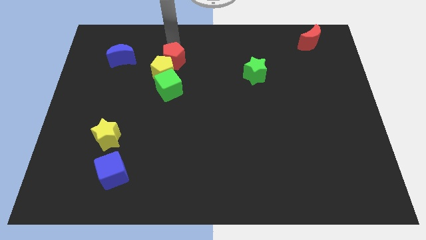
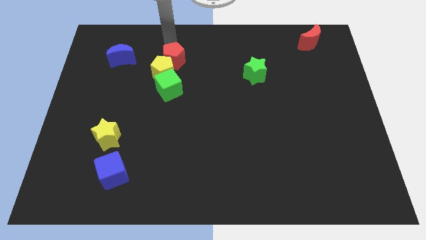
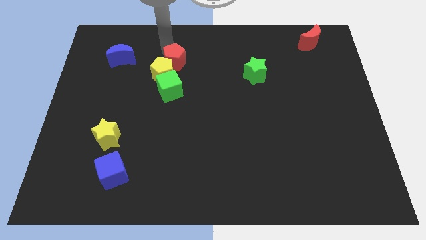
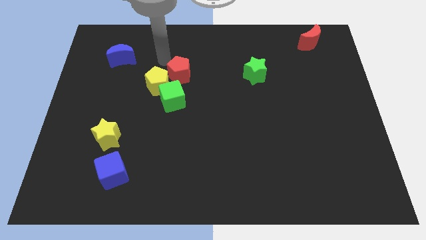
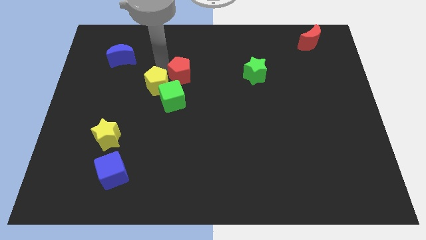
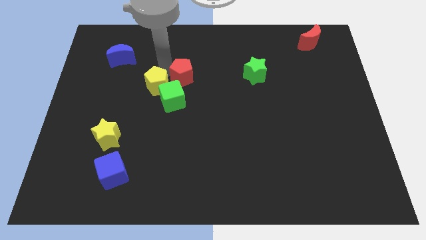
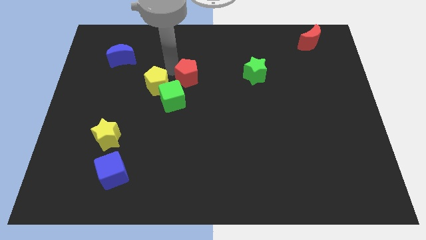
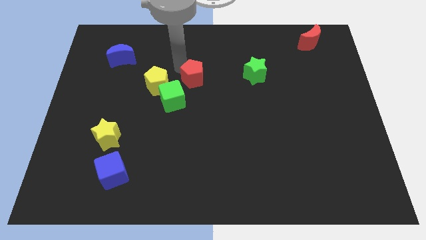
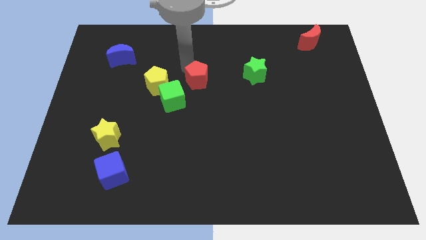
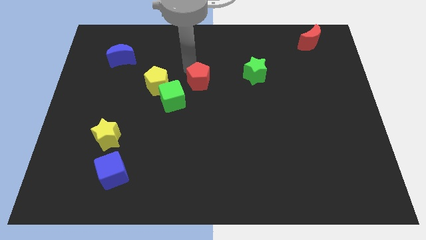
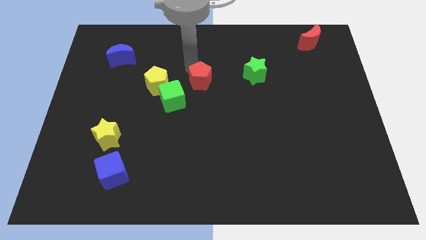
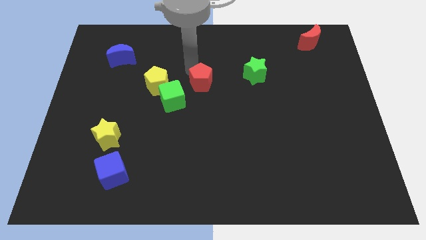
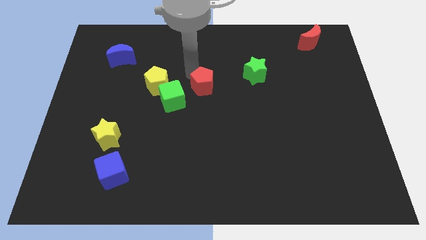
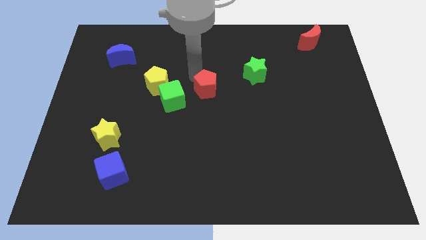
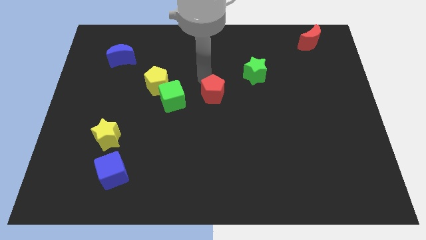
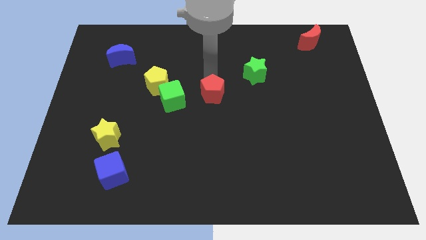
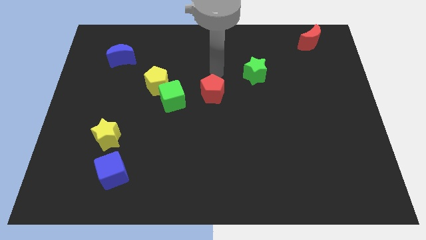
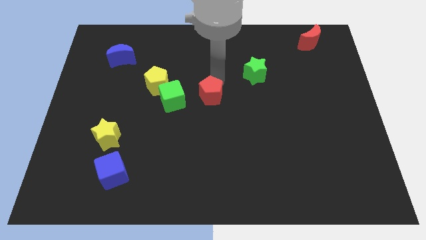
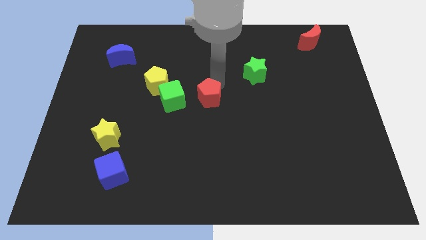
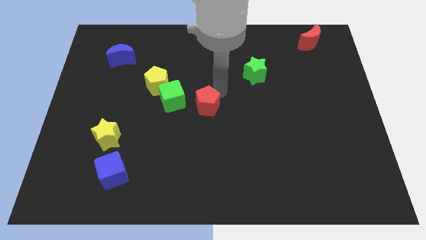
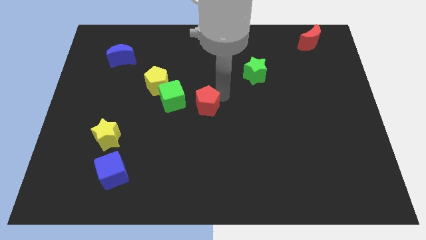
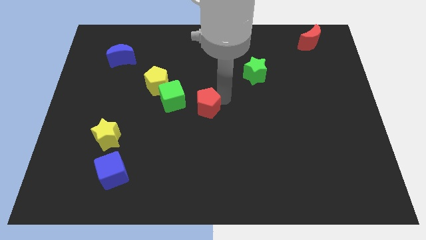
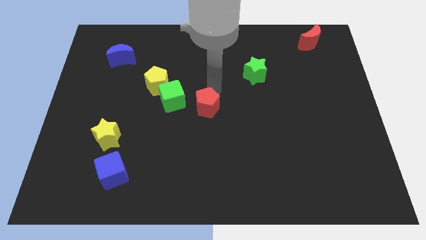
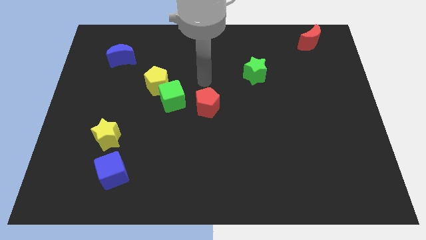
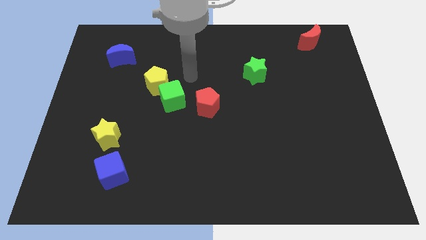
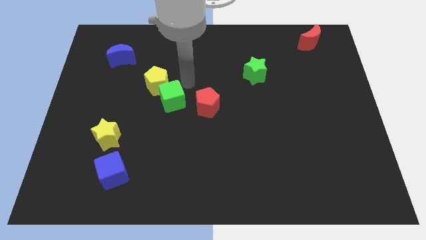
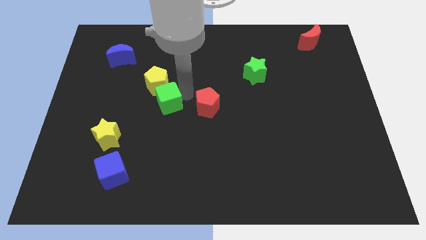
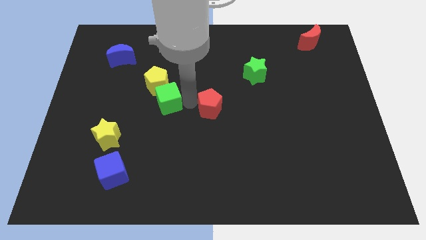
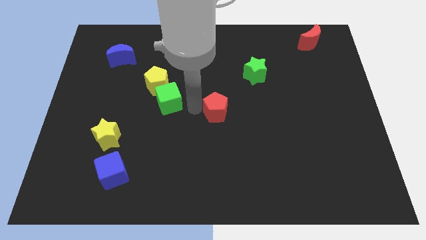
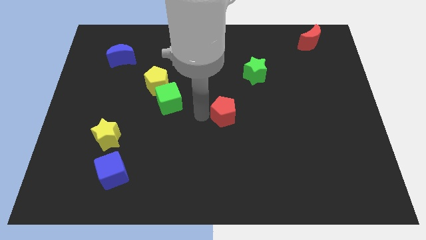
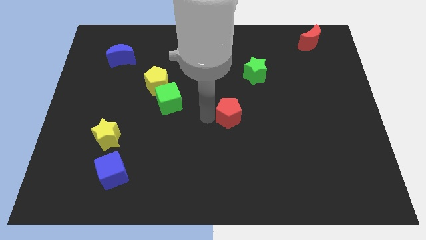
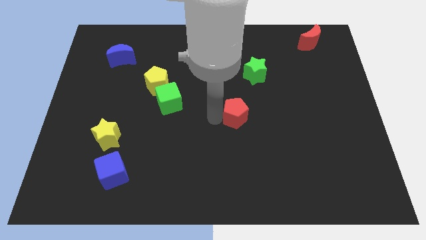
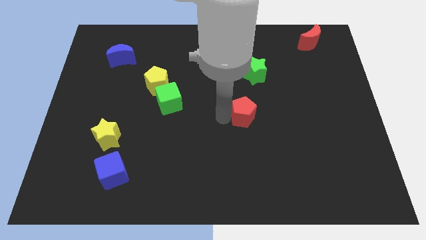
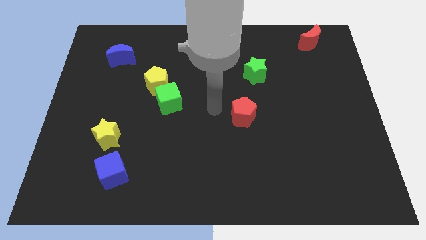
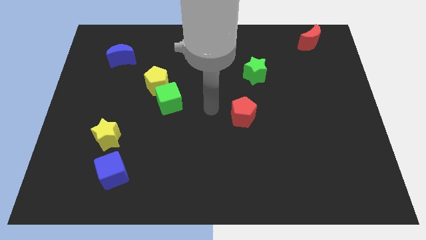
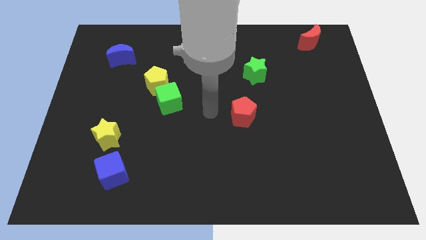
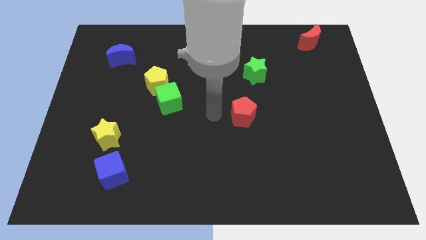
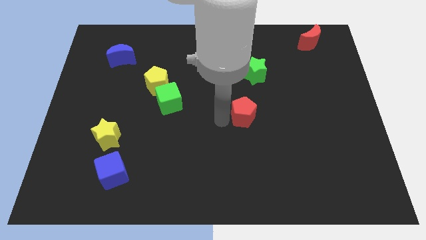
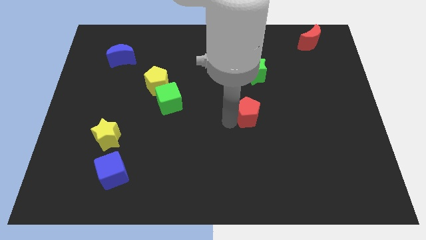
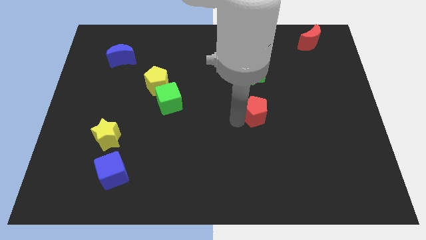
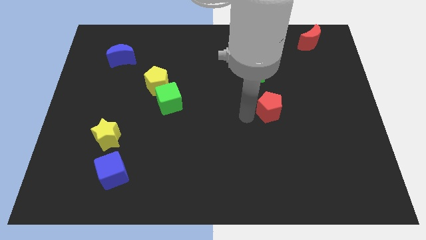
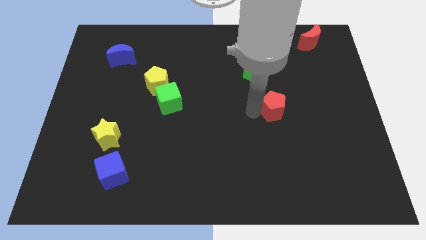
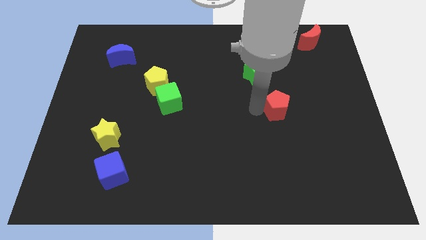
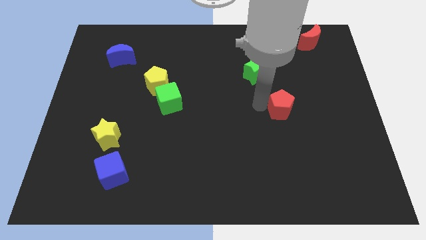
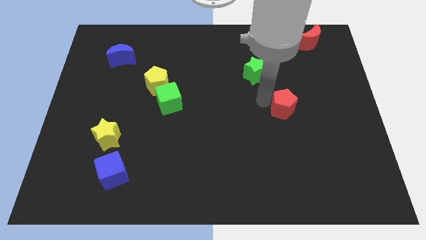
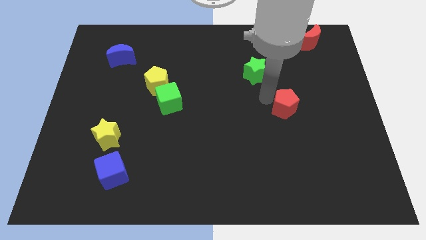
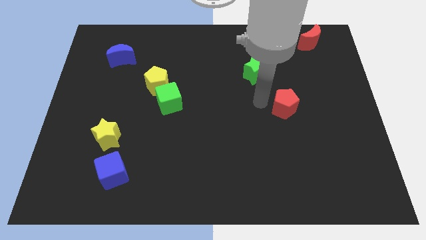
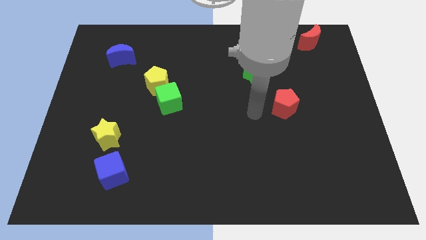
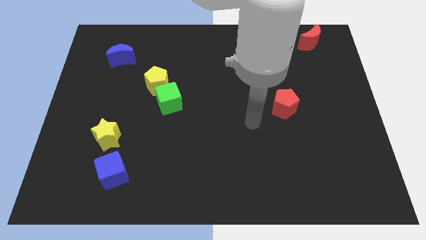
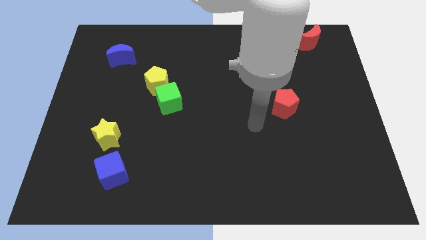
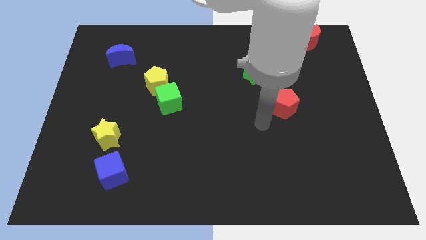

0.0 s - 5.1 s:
move red pentagon towards right center

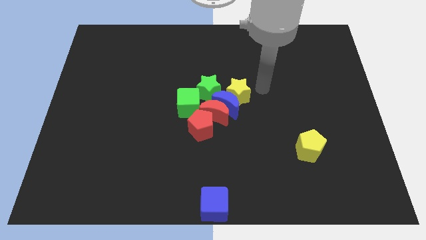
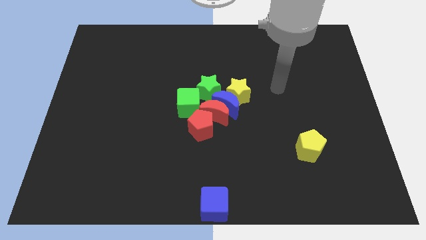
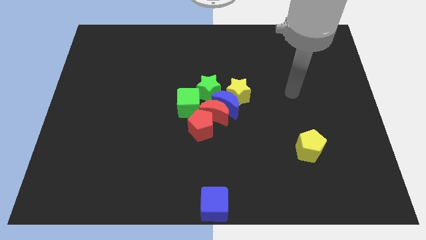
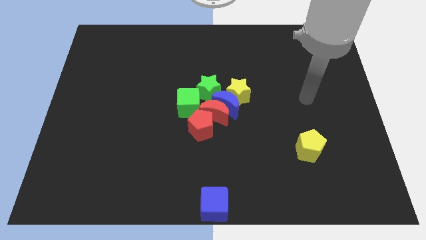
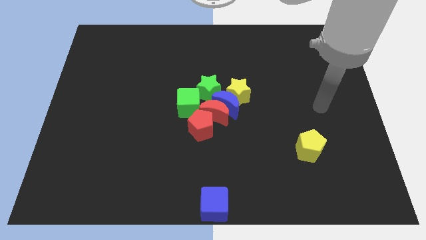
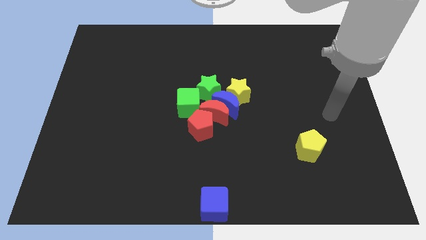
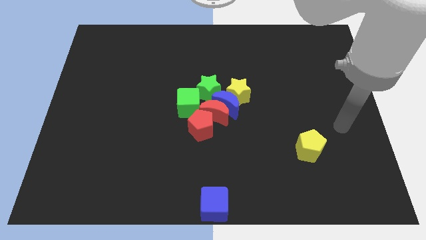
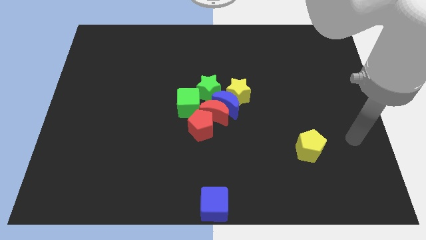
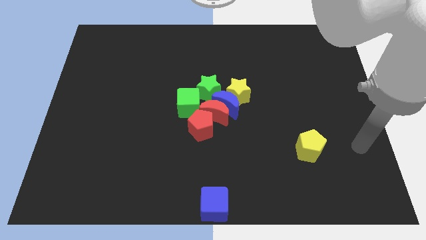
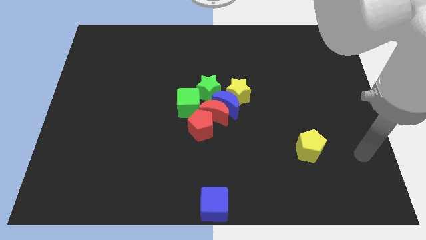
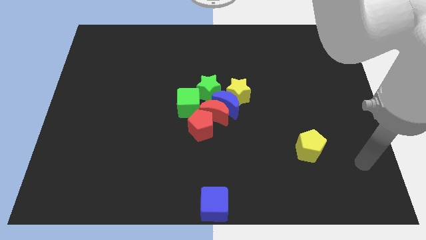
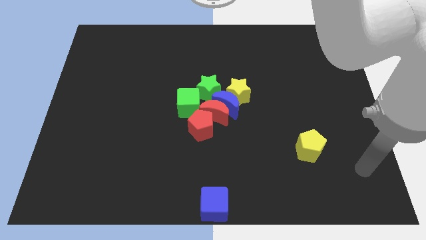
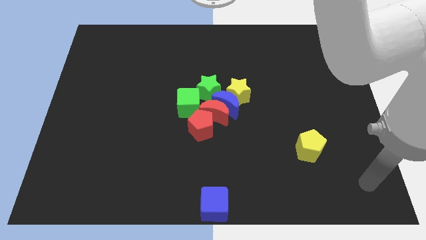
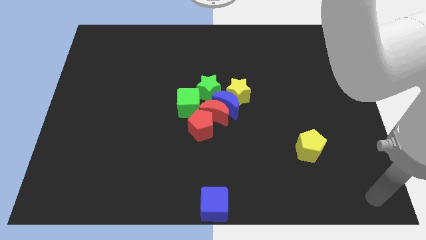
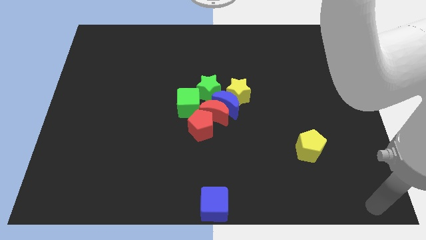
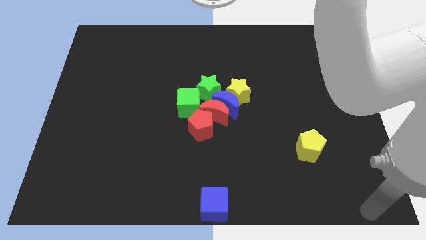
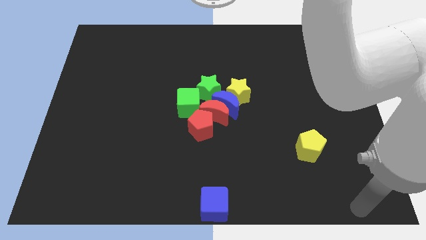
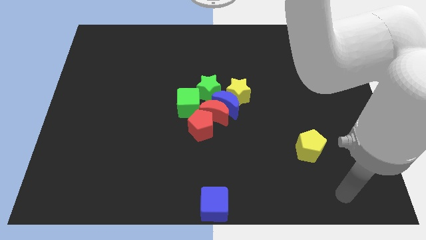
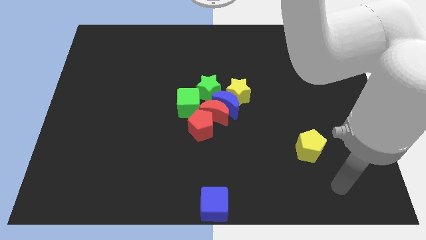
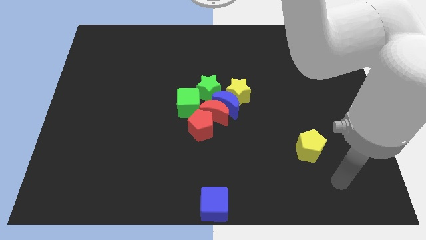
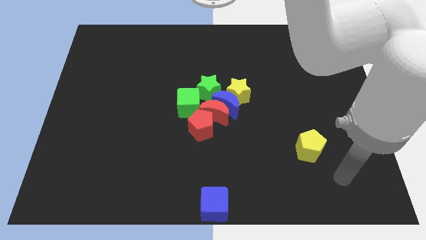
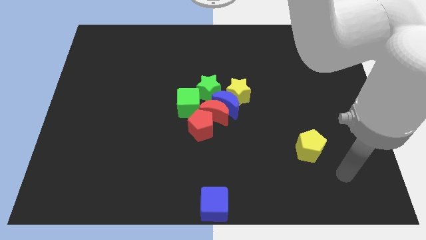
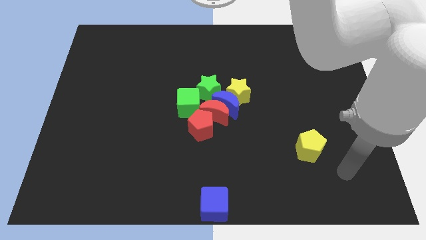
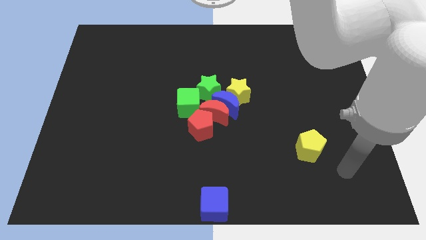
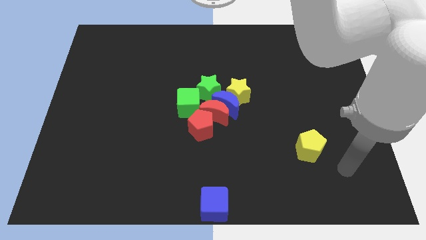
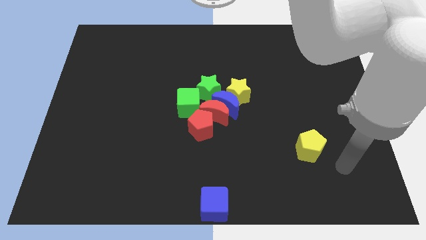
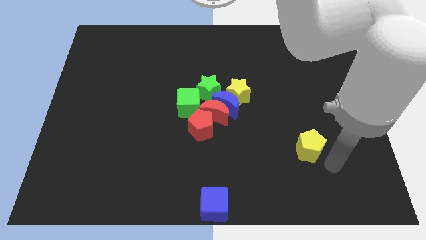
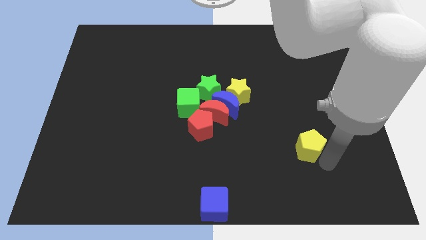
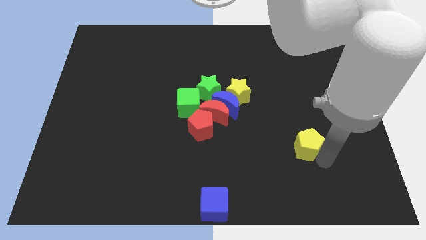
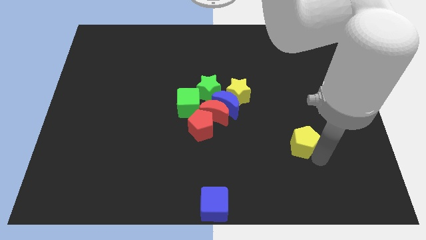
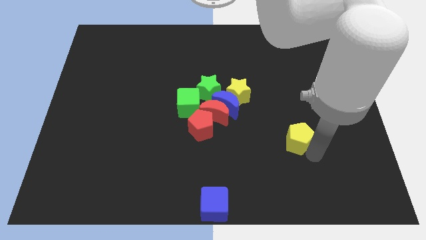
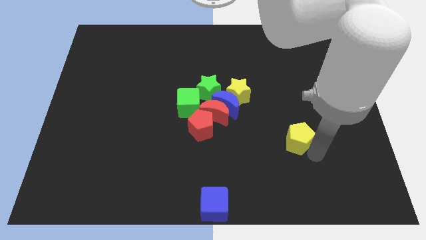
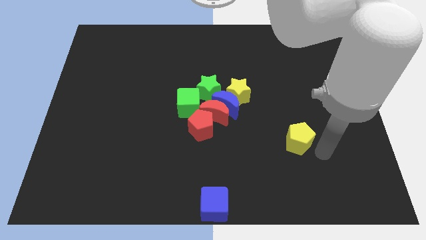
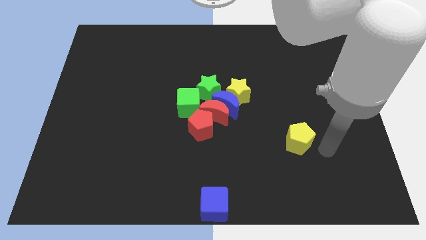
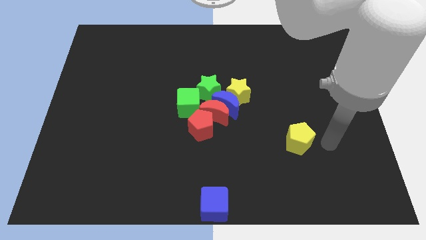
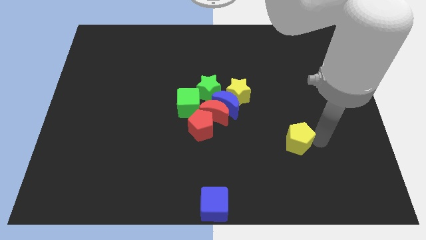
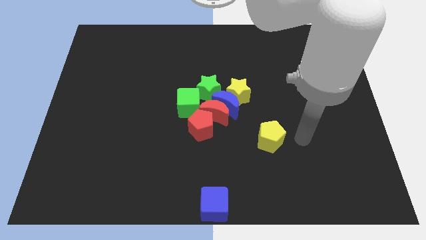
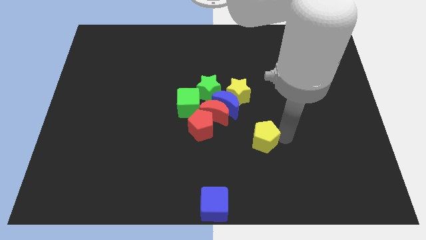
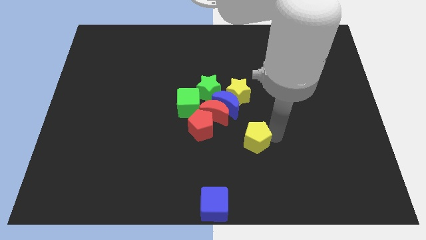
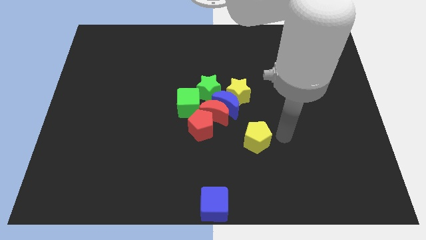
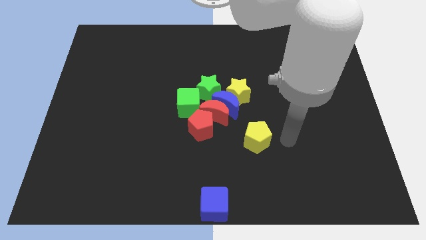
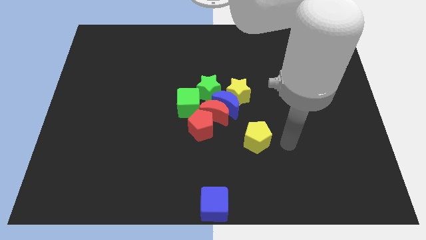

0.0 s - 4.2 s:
move the yellow pentagon towards the group of blocks
